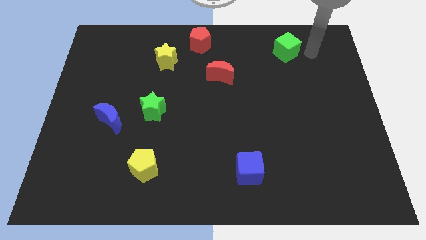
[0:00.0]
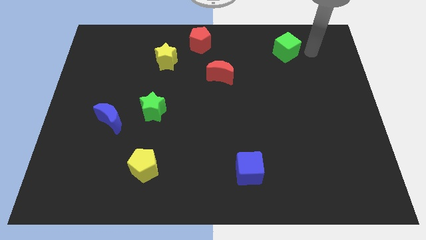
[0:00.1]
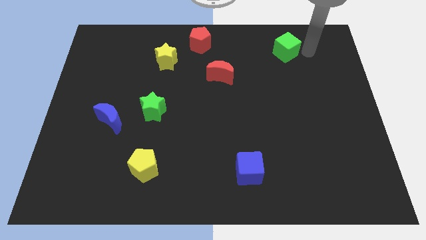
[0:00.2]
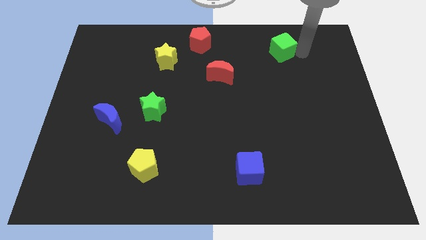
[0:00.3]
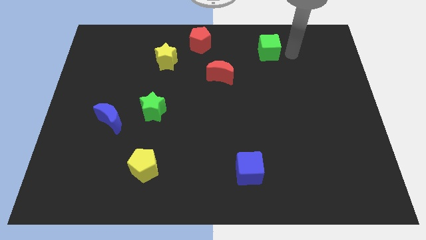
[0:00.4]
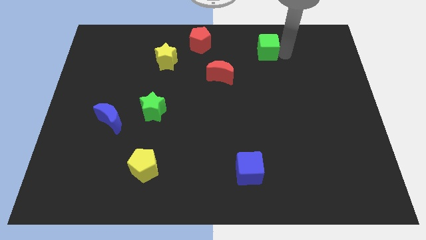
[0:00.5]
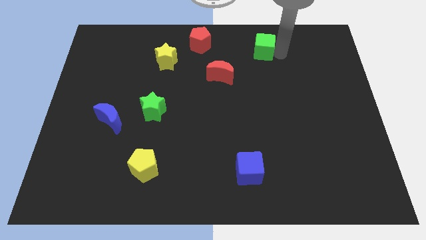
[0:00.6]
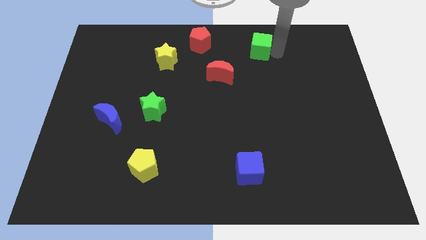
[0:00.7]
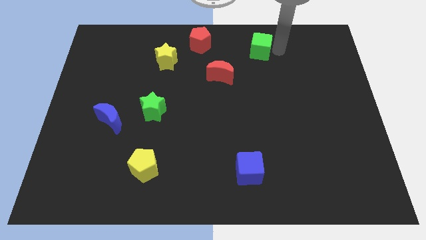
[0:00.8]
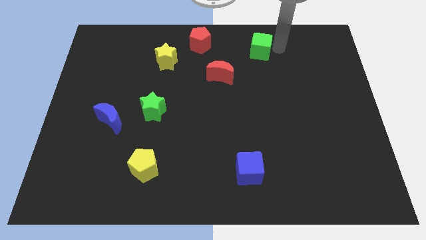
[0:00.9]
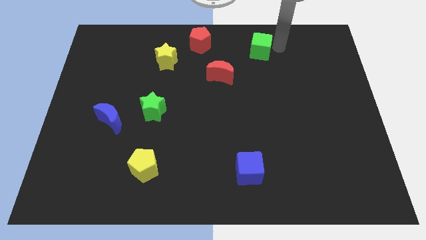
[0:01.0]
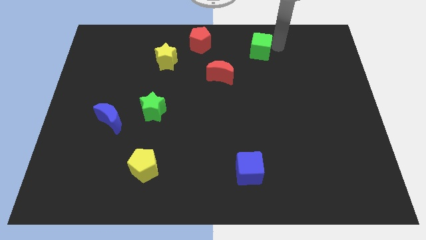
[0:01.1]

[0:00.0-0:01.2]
move the green cube to the top right of the red crescent

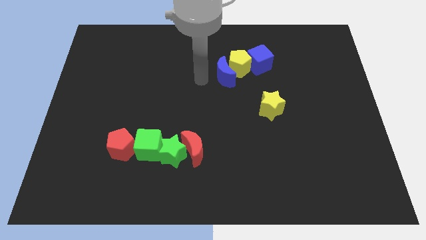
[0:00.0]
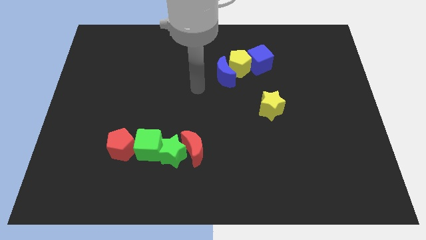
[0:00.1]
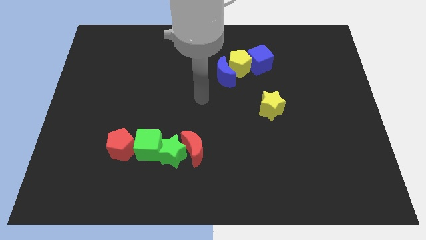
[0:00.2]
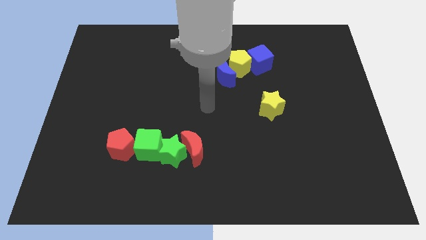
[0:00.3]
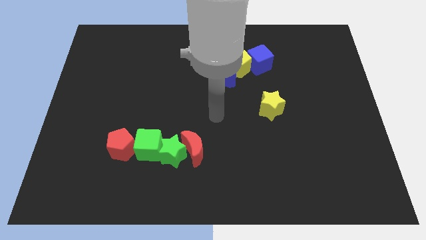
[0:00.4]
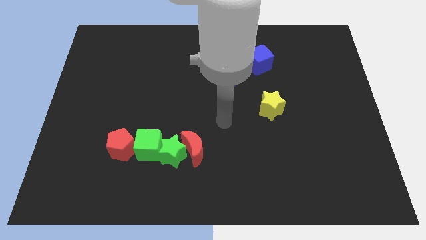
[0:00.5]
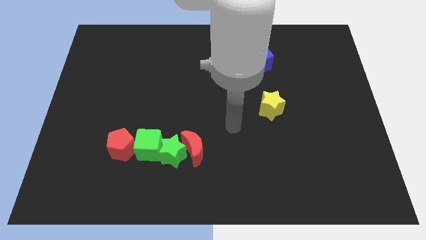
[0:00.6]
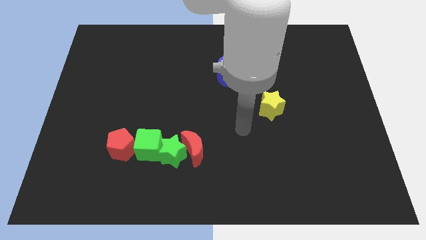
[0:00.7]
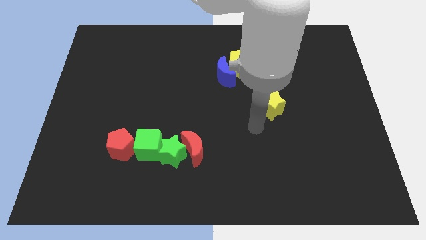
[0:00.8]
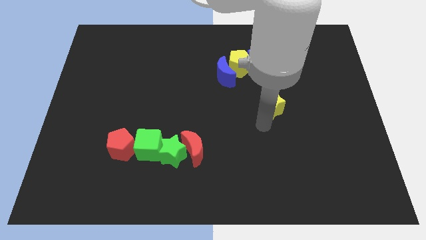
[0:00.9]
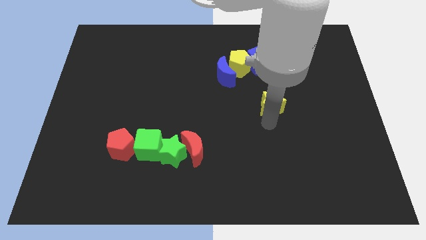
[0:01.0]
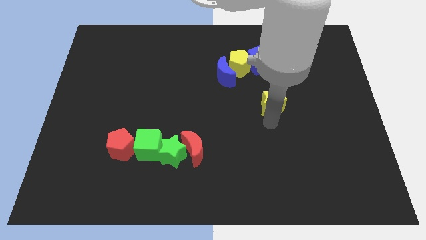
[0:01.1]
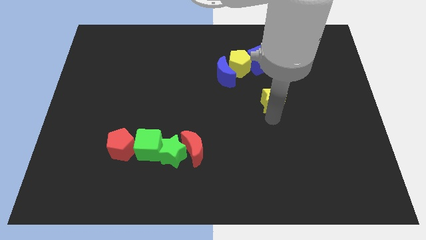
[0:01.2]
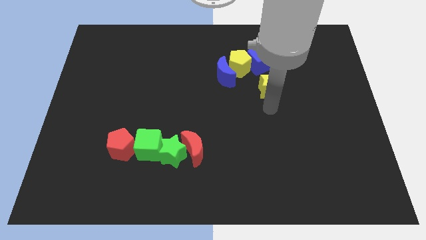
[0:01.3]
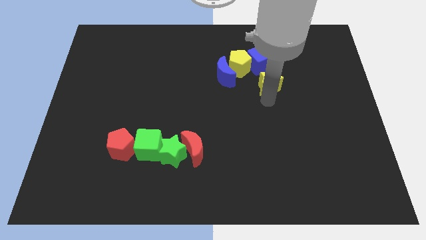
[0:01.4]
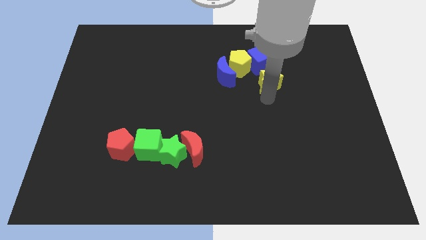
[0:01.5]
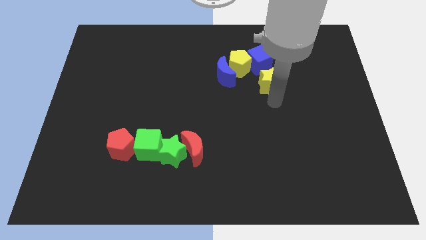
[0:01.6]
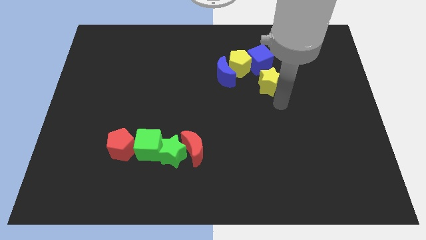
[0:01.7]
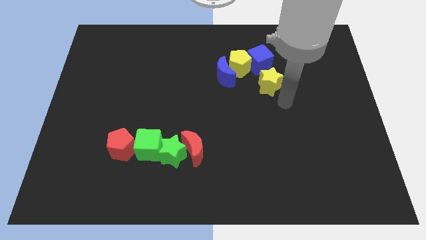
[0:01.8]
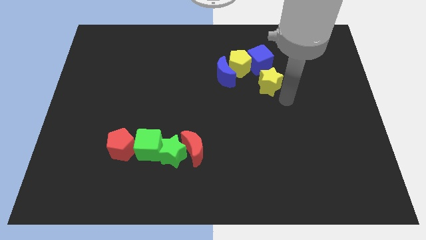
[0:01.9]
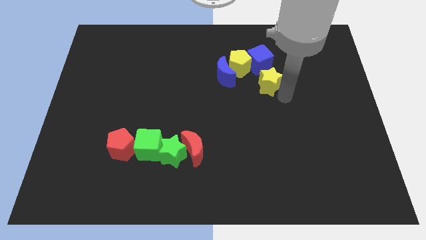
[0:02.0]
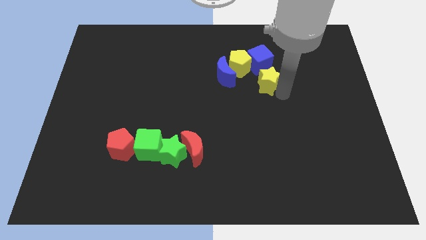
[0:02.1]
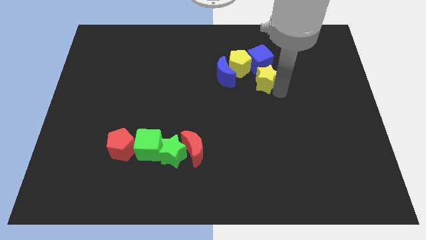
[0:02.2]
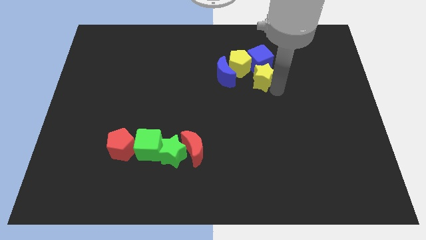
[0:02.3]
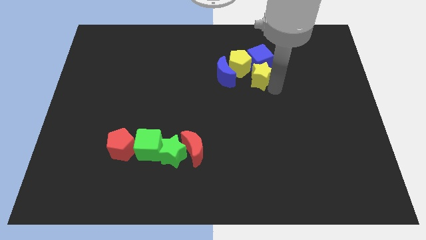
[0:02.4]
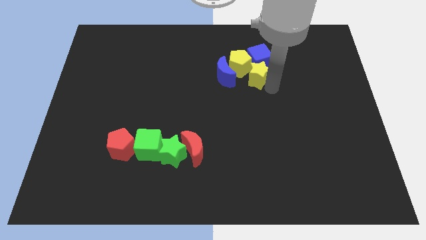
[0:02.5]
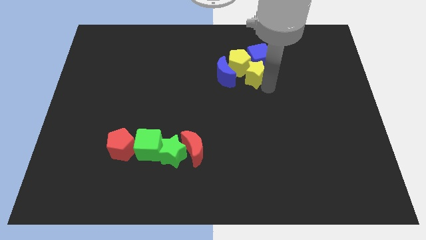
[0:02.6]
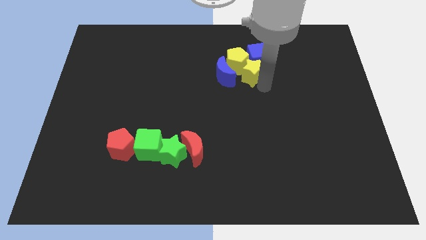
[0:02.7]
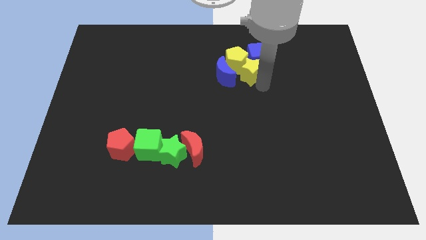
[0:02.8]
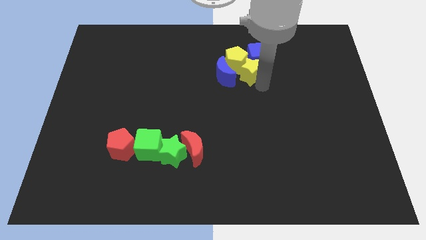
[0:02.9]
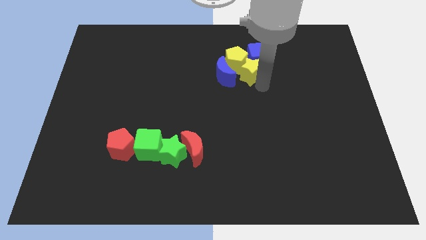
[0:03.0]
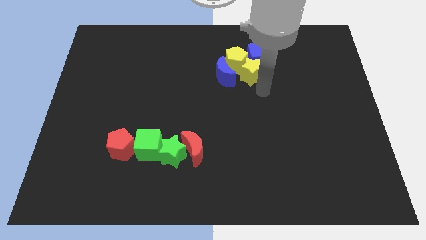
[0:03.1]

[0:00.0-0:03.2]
push the yellow star into the yellow pentagon

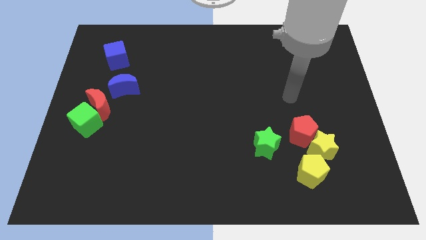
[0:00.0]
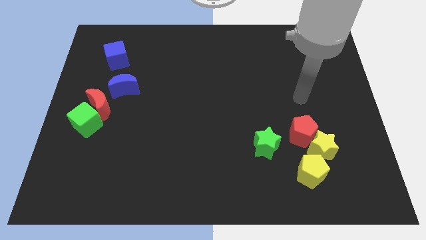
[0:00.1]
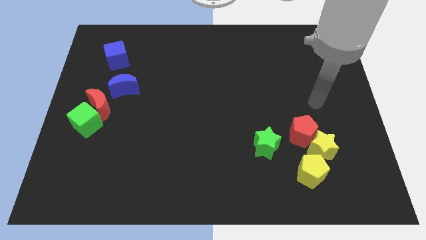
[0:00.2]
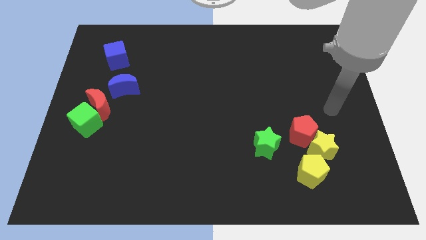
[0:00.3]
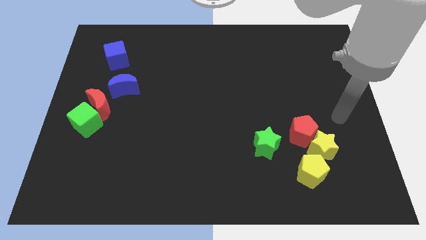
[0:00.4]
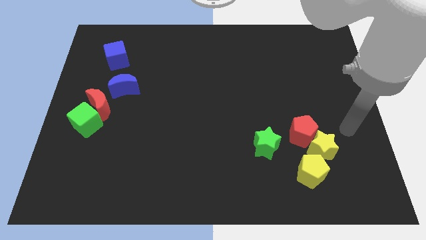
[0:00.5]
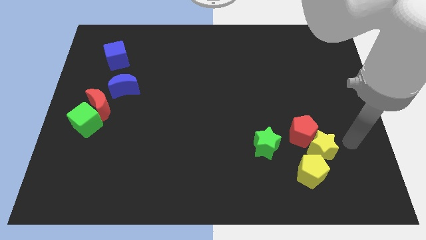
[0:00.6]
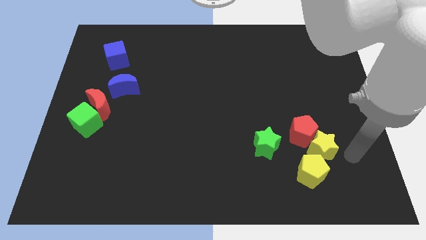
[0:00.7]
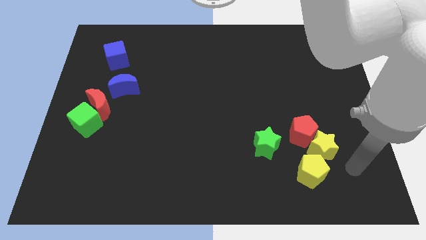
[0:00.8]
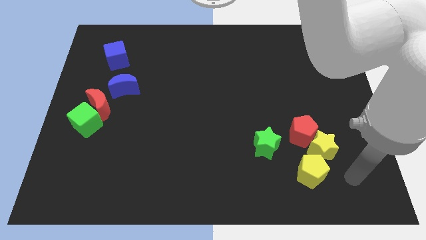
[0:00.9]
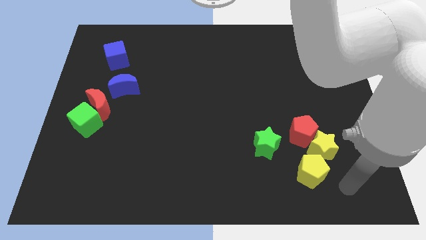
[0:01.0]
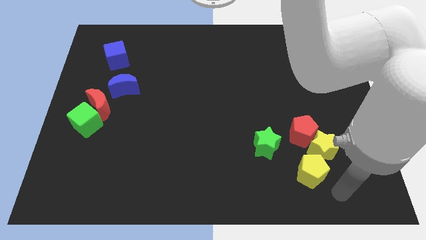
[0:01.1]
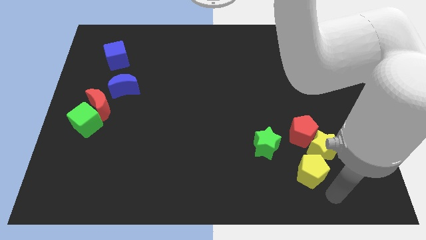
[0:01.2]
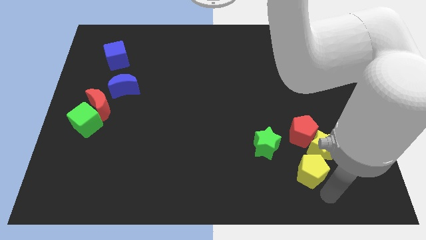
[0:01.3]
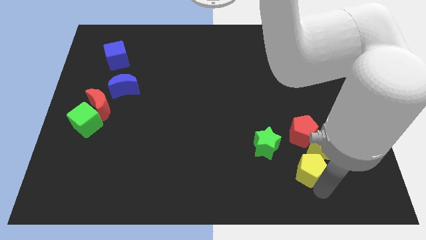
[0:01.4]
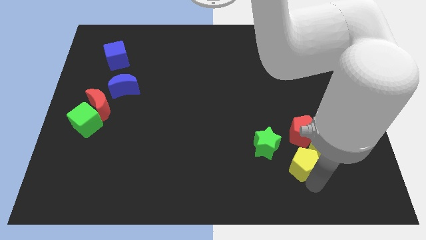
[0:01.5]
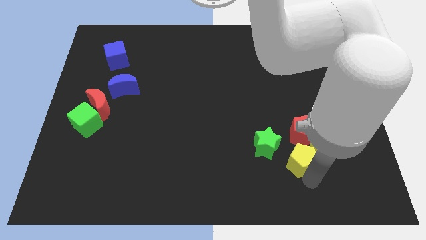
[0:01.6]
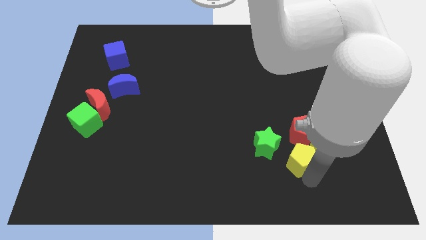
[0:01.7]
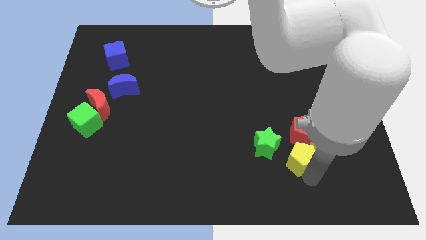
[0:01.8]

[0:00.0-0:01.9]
slightly push the yellow pentagon to the left of the yellow star

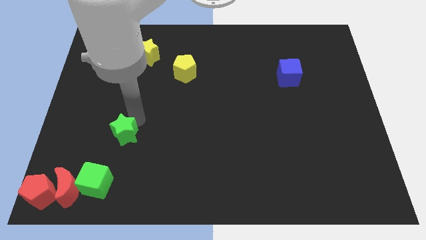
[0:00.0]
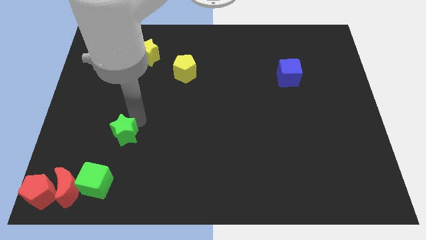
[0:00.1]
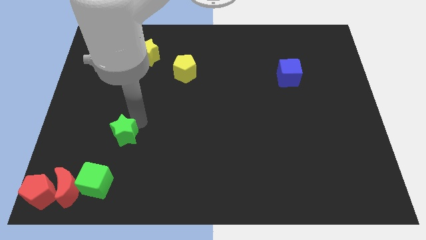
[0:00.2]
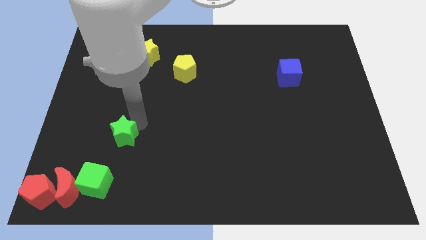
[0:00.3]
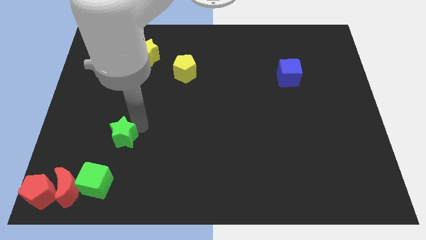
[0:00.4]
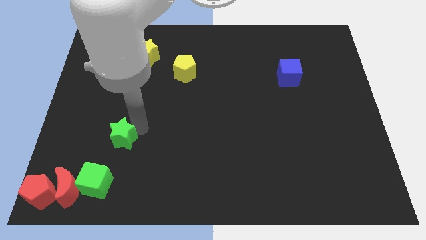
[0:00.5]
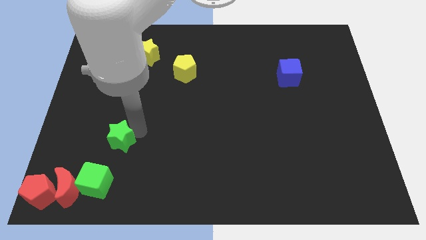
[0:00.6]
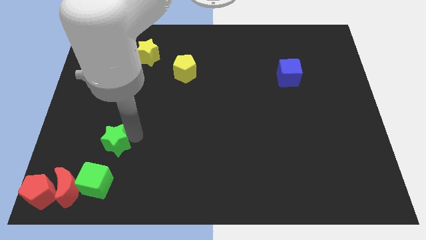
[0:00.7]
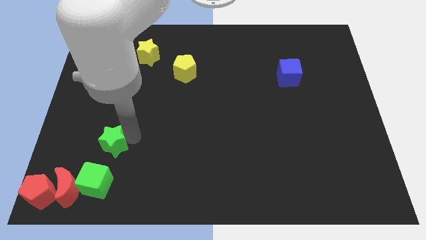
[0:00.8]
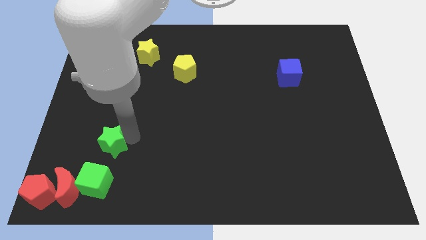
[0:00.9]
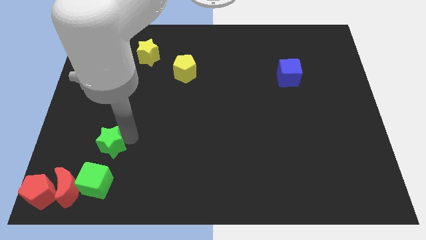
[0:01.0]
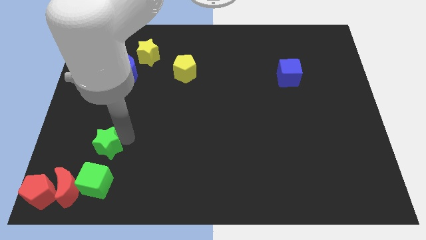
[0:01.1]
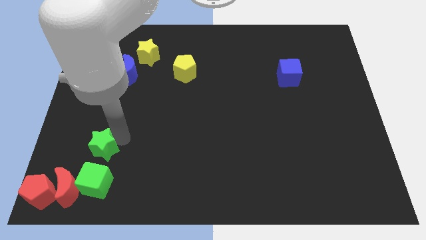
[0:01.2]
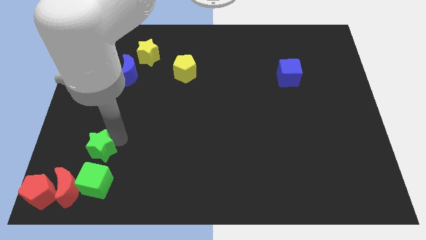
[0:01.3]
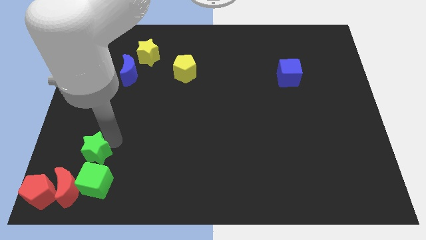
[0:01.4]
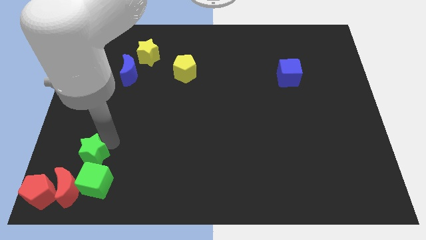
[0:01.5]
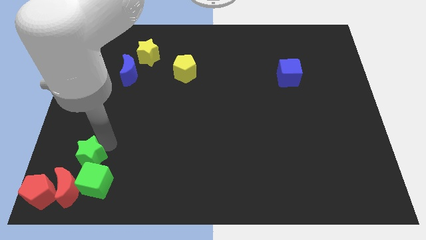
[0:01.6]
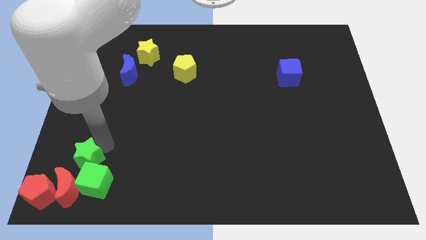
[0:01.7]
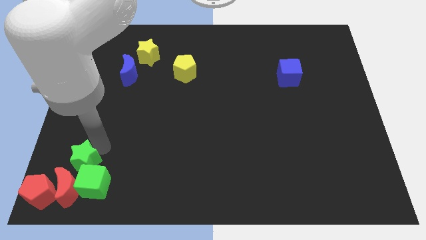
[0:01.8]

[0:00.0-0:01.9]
put the green star at the top left of the green cube

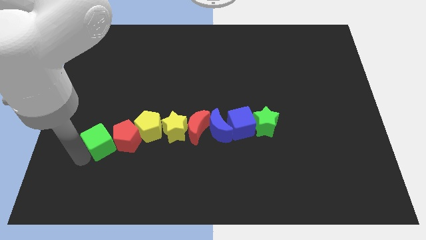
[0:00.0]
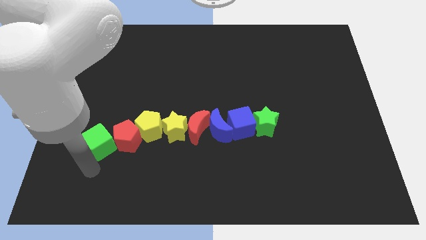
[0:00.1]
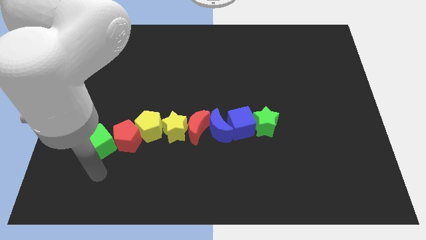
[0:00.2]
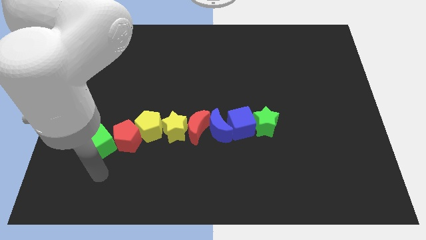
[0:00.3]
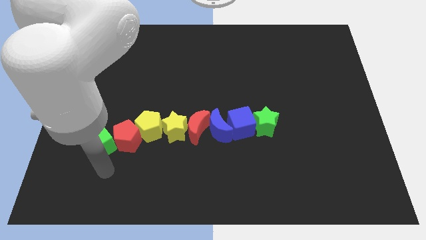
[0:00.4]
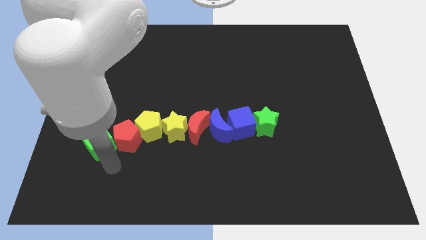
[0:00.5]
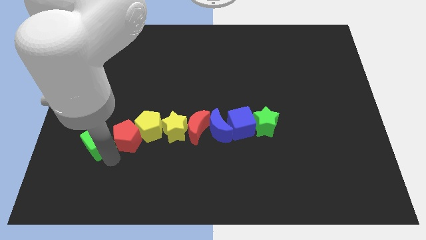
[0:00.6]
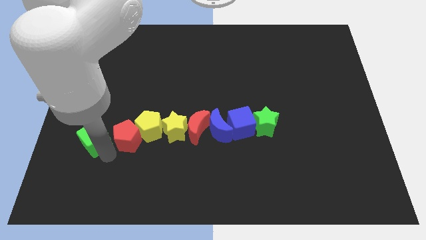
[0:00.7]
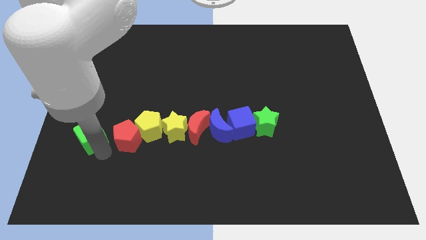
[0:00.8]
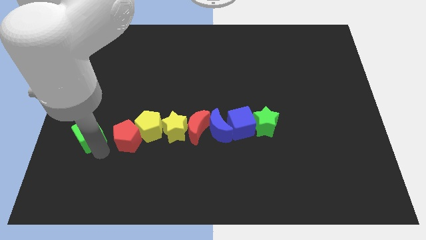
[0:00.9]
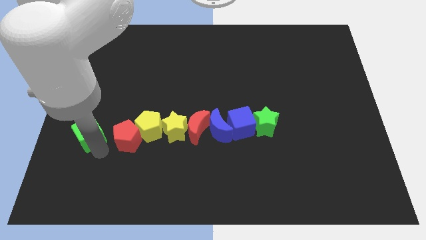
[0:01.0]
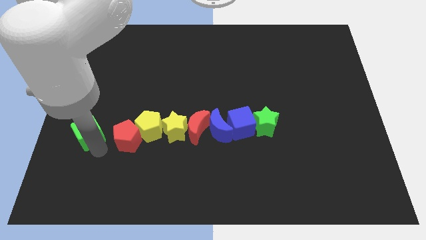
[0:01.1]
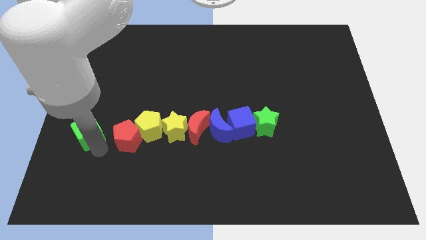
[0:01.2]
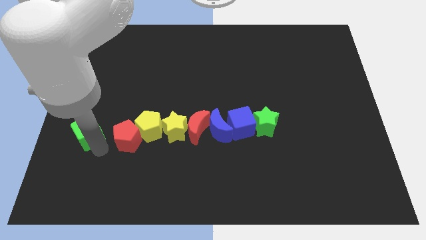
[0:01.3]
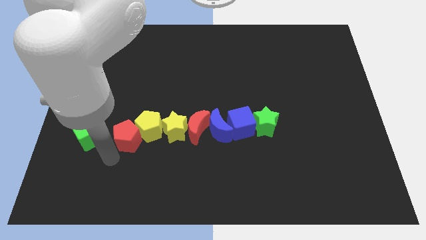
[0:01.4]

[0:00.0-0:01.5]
separate the green cube and the red pentagon
